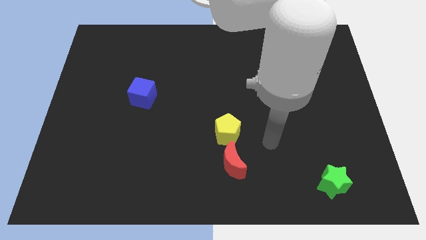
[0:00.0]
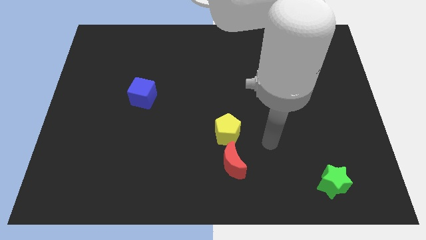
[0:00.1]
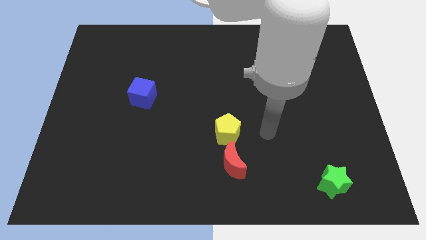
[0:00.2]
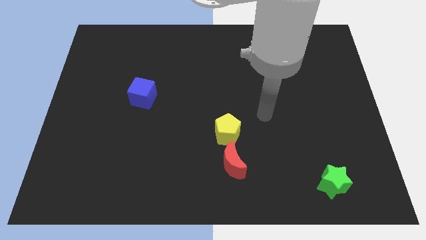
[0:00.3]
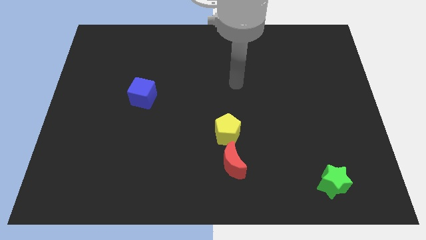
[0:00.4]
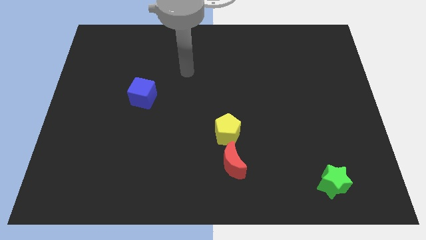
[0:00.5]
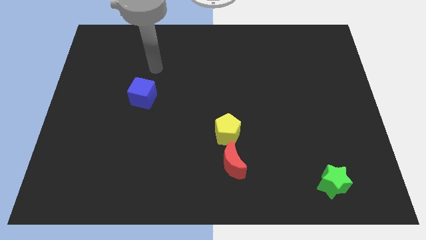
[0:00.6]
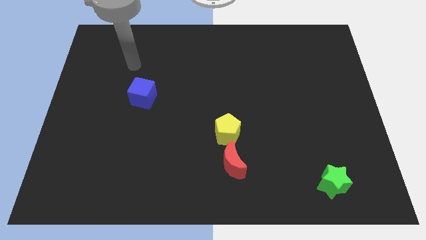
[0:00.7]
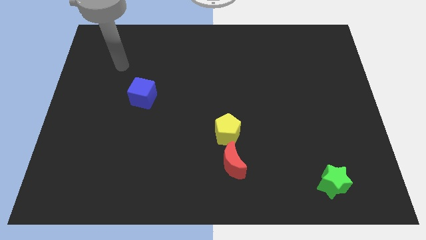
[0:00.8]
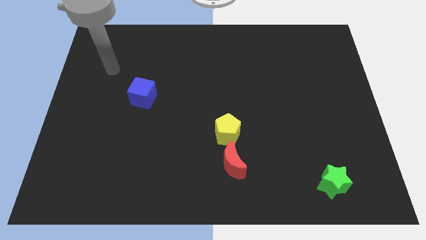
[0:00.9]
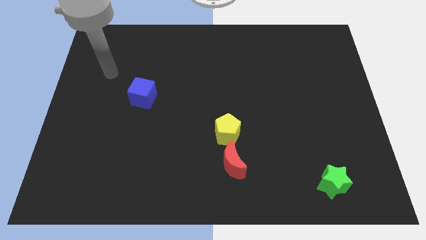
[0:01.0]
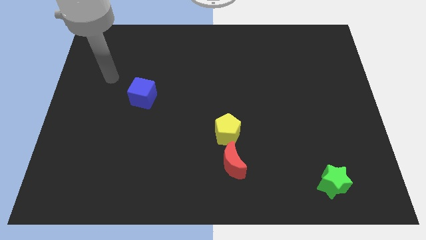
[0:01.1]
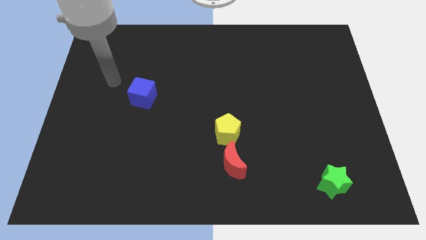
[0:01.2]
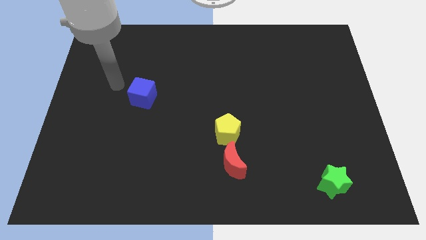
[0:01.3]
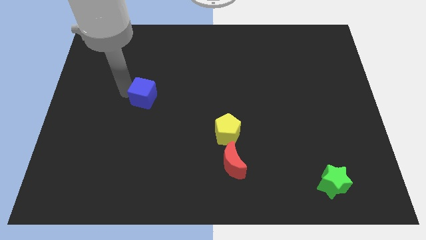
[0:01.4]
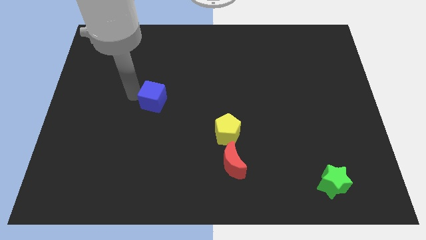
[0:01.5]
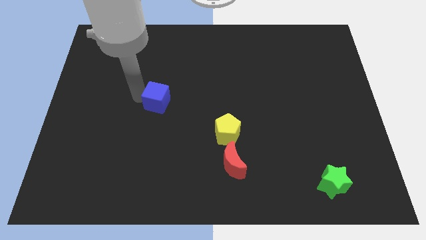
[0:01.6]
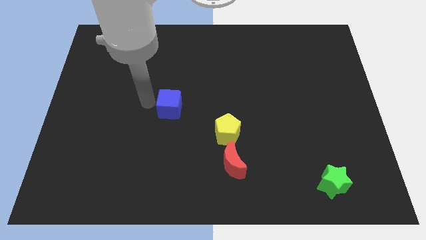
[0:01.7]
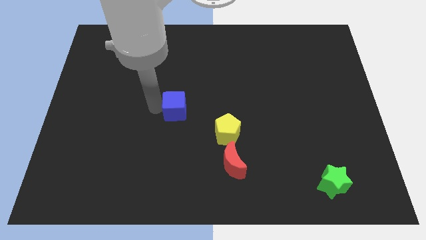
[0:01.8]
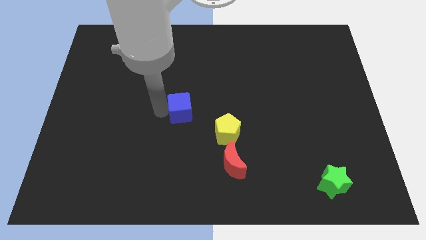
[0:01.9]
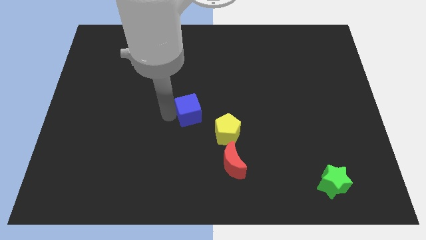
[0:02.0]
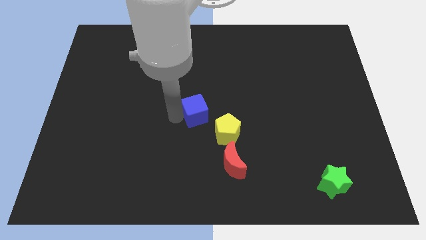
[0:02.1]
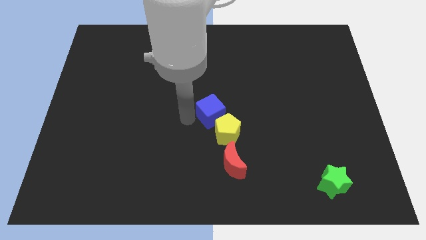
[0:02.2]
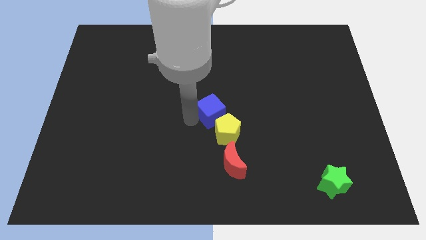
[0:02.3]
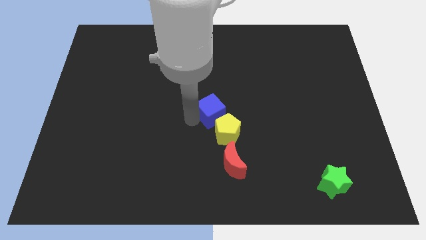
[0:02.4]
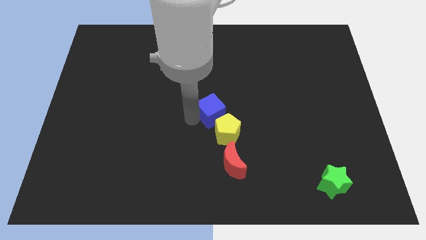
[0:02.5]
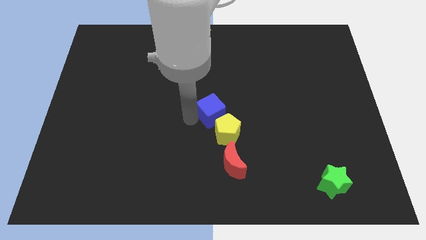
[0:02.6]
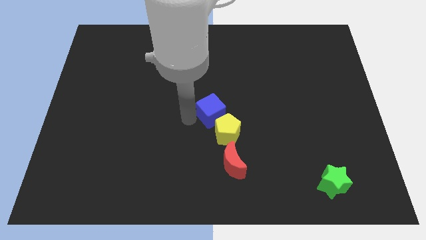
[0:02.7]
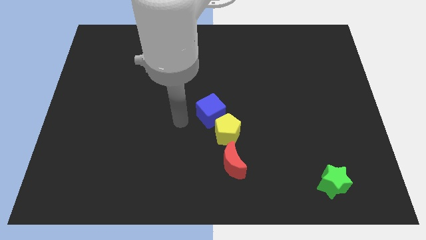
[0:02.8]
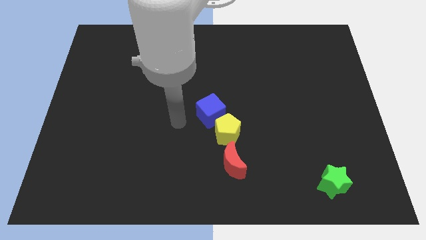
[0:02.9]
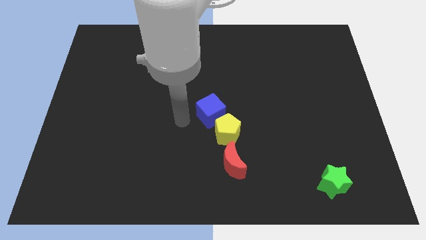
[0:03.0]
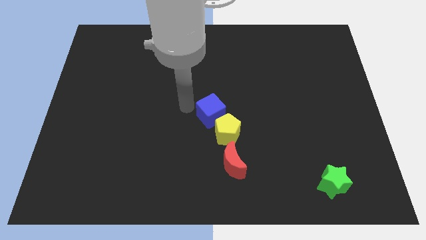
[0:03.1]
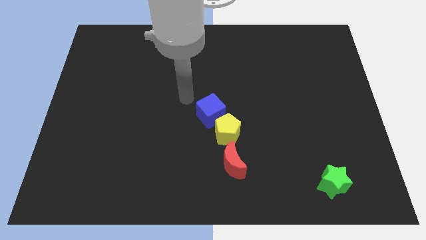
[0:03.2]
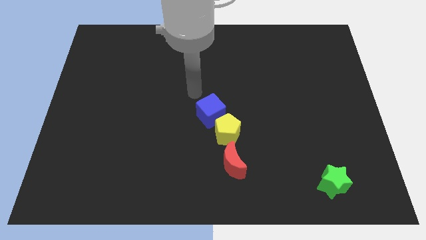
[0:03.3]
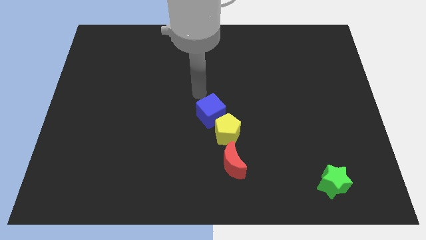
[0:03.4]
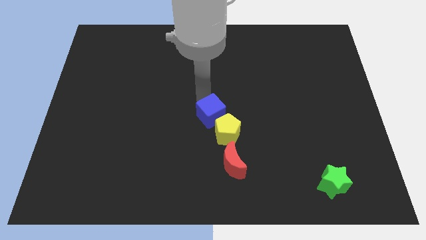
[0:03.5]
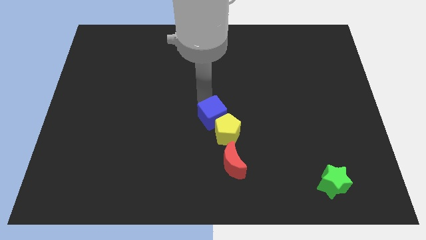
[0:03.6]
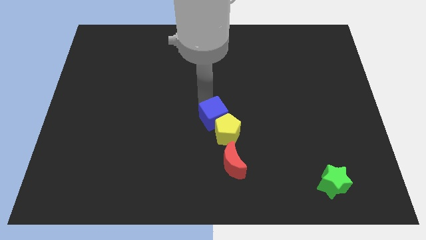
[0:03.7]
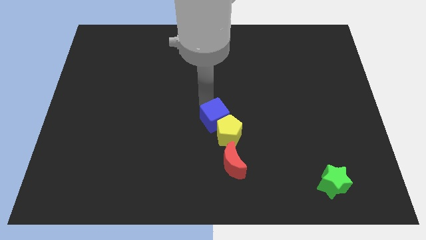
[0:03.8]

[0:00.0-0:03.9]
move the blue cube next to the yellow pentagon

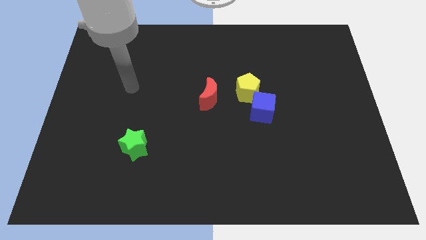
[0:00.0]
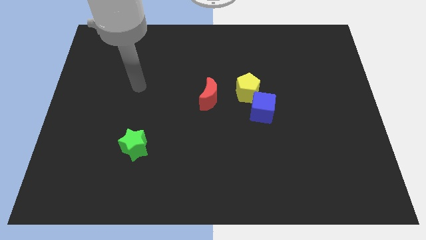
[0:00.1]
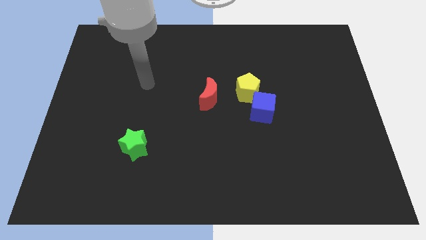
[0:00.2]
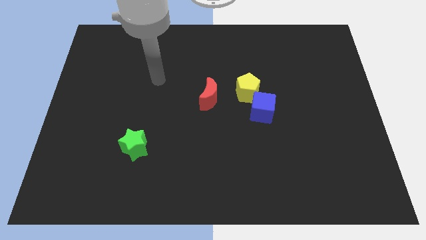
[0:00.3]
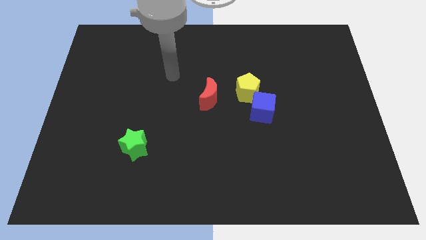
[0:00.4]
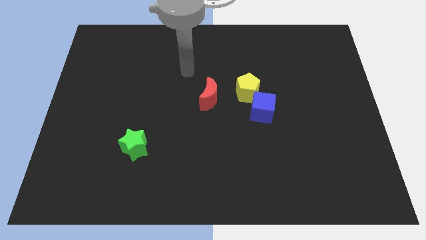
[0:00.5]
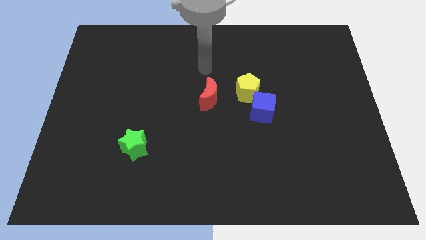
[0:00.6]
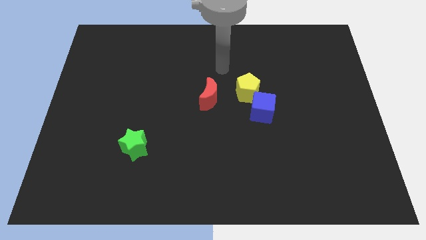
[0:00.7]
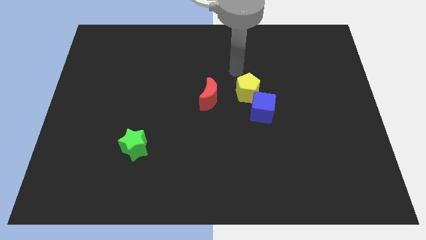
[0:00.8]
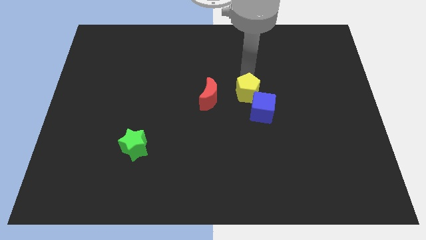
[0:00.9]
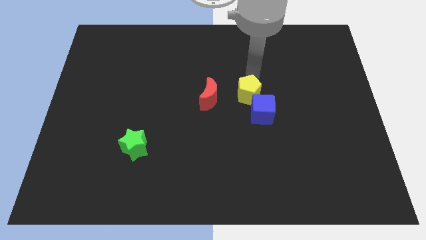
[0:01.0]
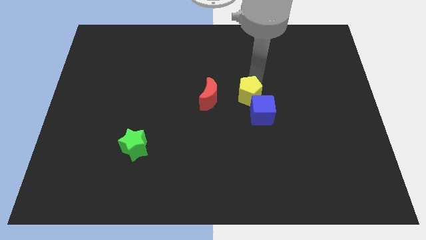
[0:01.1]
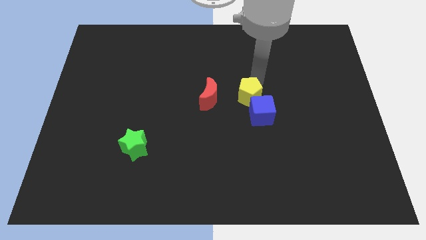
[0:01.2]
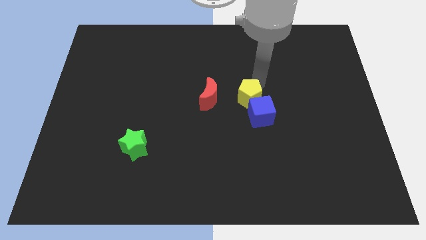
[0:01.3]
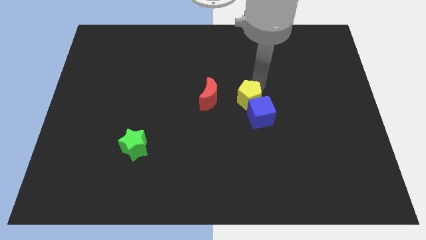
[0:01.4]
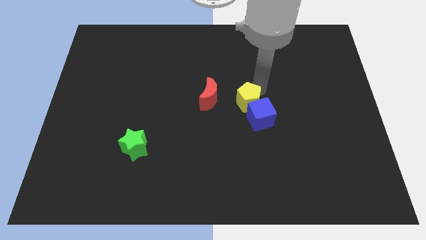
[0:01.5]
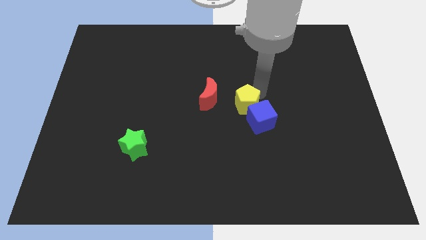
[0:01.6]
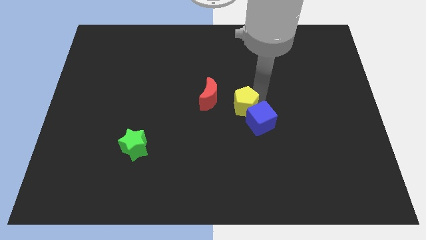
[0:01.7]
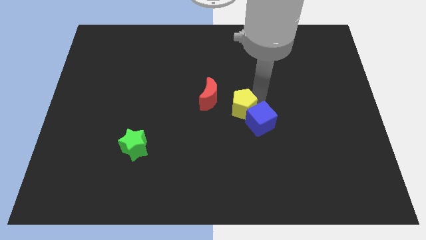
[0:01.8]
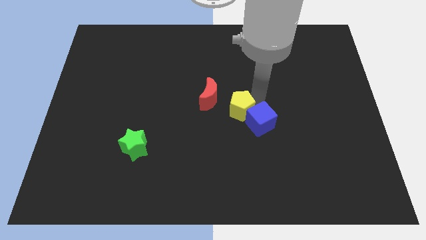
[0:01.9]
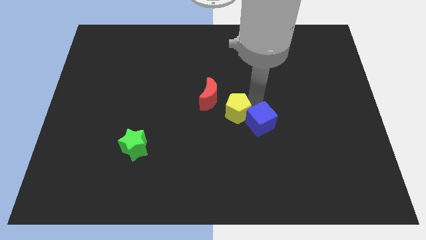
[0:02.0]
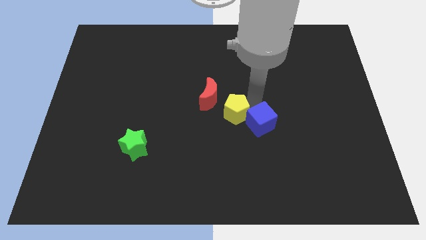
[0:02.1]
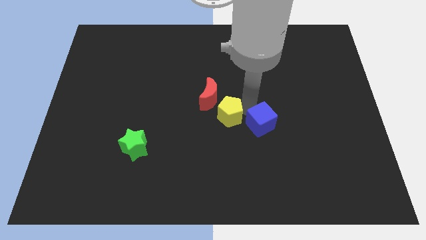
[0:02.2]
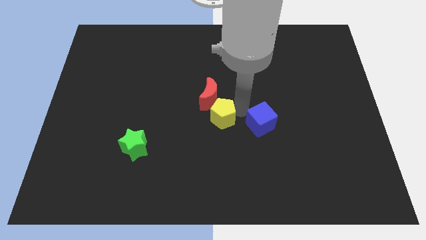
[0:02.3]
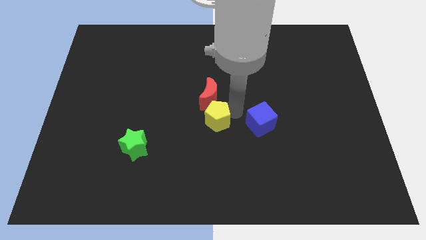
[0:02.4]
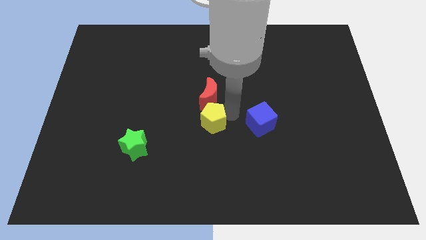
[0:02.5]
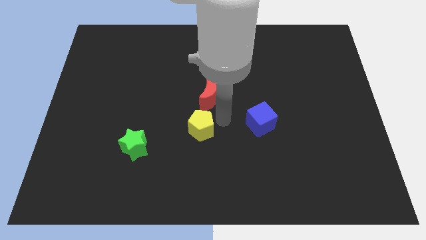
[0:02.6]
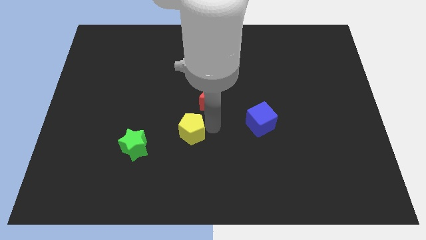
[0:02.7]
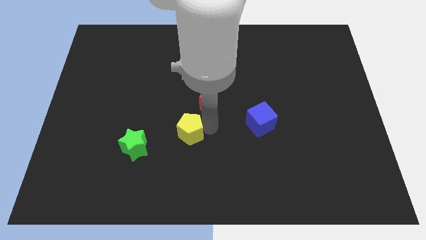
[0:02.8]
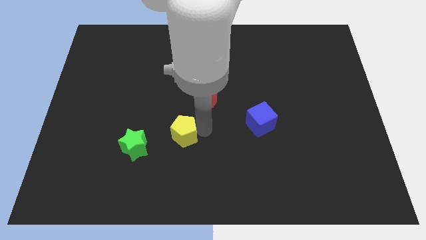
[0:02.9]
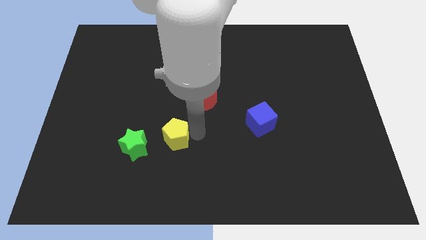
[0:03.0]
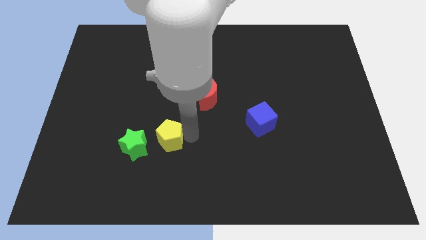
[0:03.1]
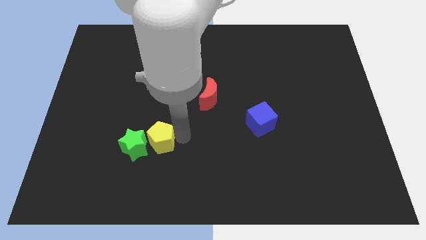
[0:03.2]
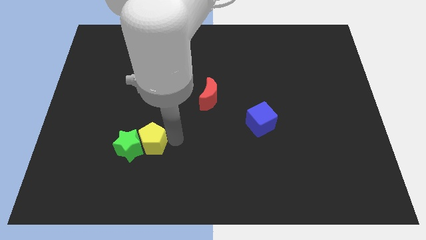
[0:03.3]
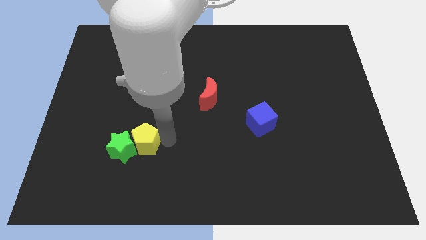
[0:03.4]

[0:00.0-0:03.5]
push the yellow block close to the green star

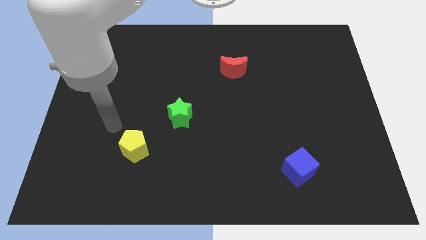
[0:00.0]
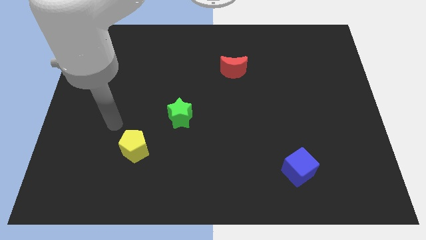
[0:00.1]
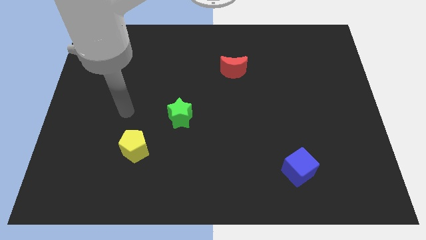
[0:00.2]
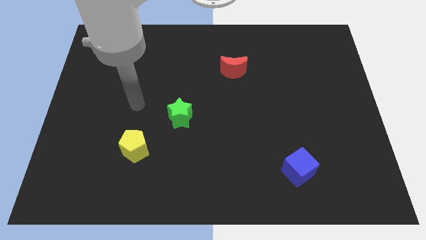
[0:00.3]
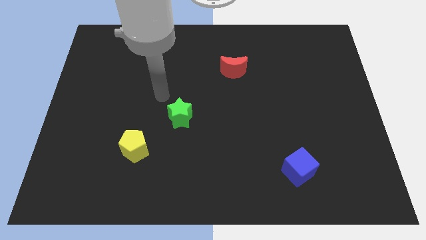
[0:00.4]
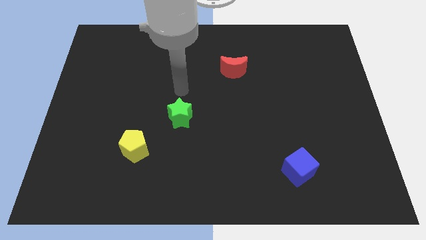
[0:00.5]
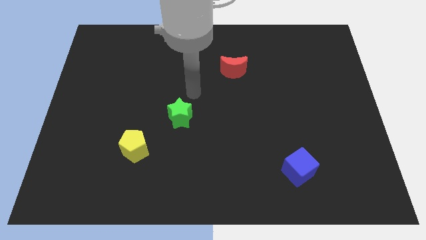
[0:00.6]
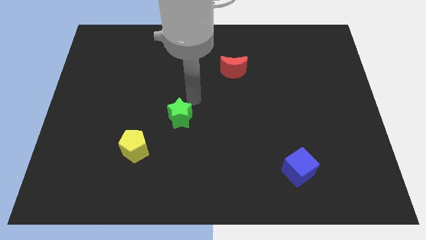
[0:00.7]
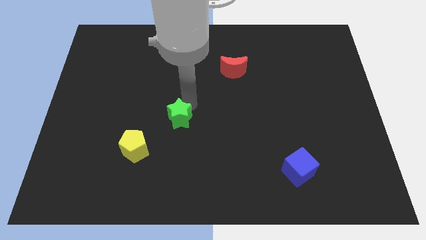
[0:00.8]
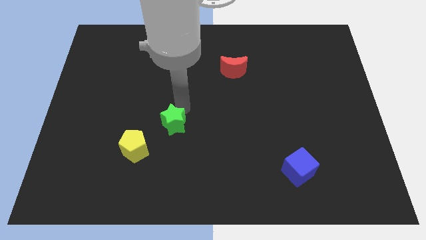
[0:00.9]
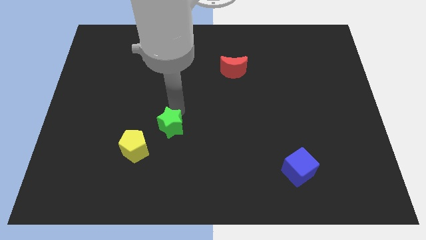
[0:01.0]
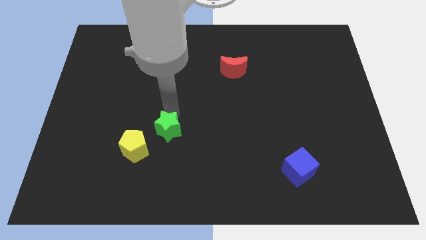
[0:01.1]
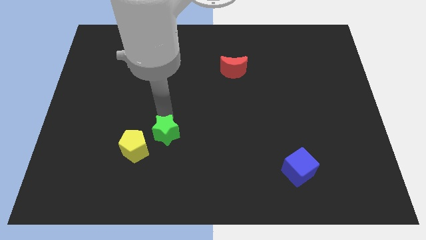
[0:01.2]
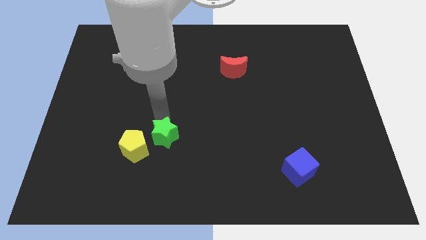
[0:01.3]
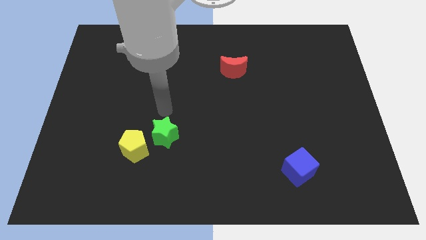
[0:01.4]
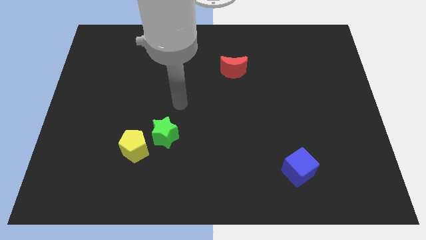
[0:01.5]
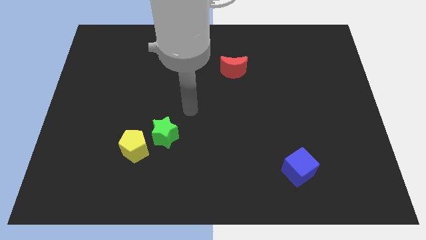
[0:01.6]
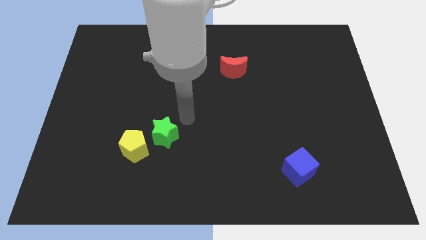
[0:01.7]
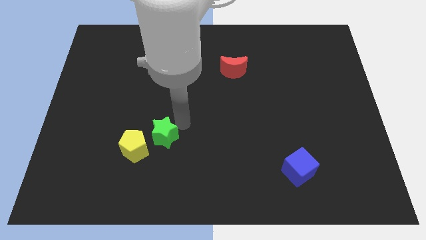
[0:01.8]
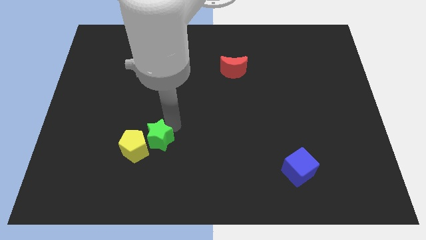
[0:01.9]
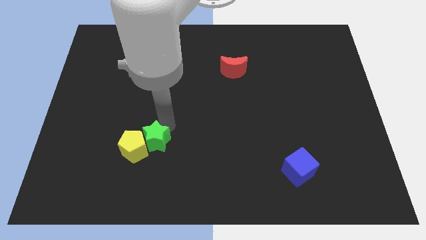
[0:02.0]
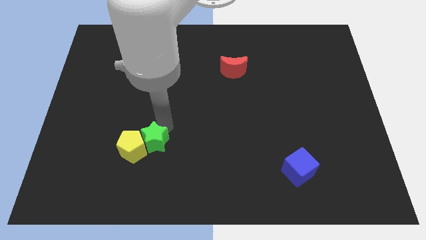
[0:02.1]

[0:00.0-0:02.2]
slide the green star close to the pentagon
